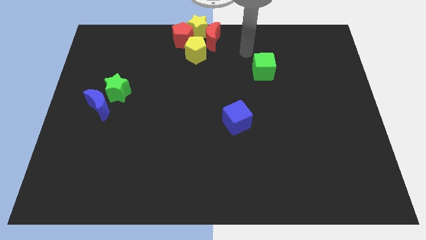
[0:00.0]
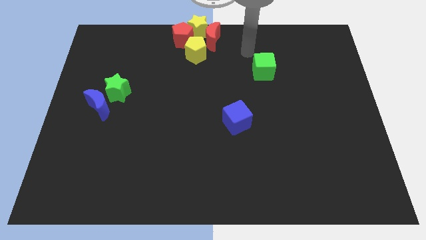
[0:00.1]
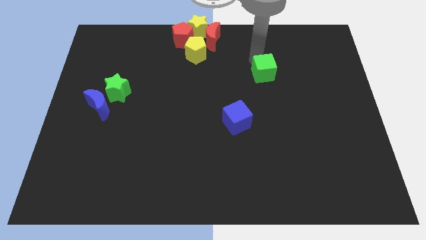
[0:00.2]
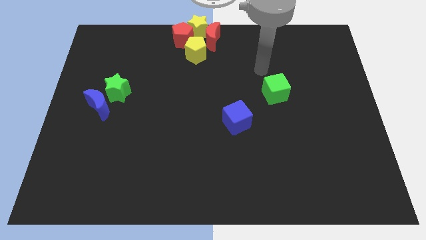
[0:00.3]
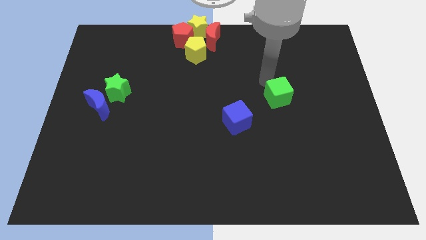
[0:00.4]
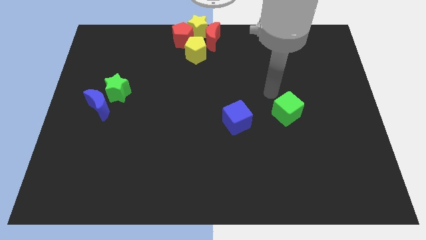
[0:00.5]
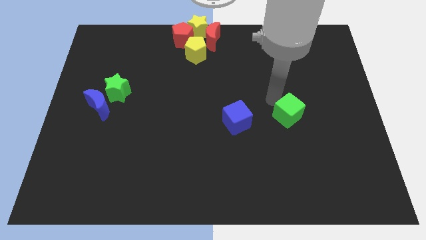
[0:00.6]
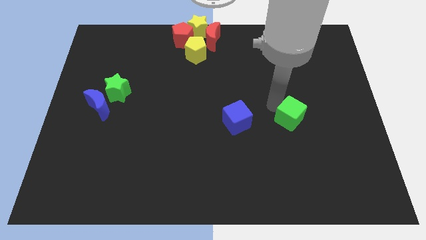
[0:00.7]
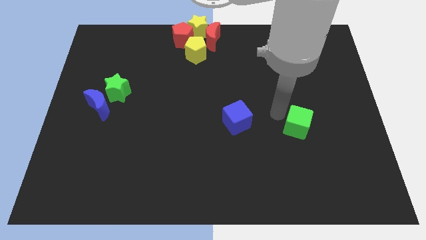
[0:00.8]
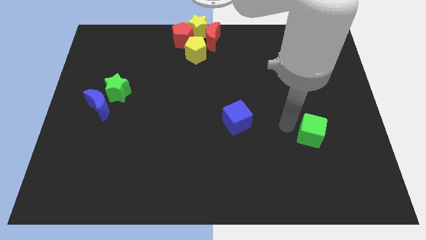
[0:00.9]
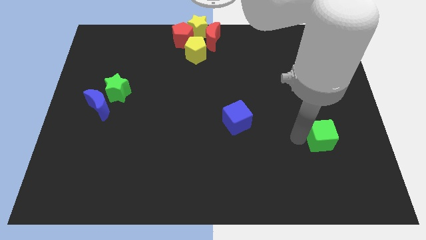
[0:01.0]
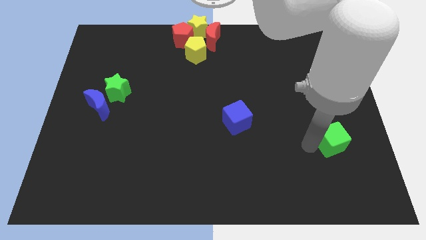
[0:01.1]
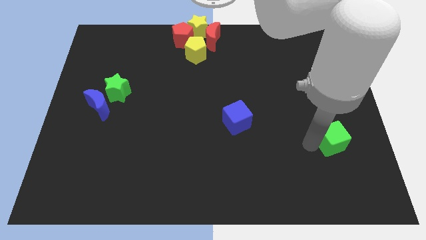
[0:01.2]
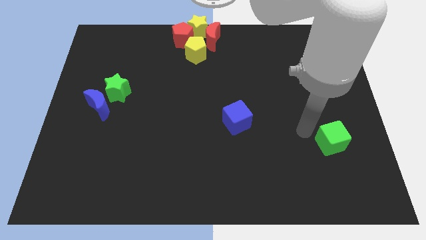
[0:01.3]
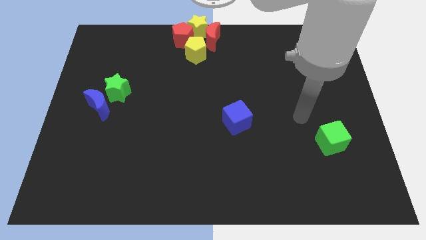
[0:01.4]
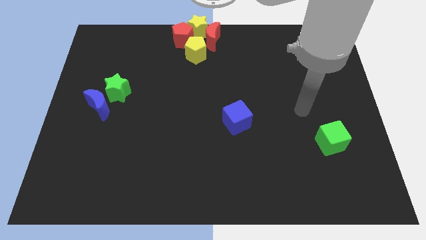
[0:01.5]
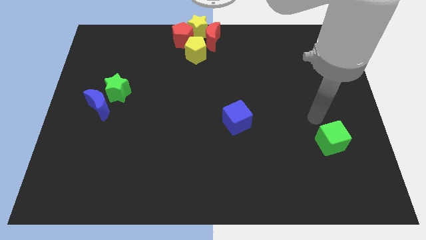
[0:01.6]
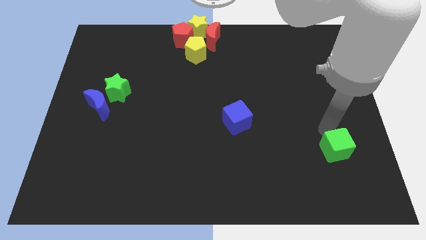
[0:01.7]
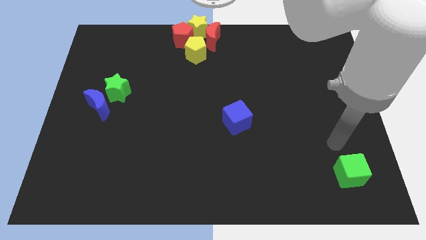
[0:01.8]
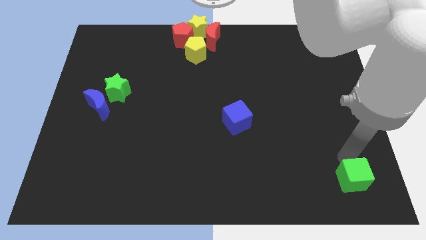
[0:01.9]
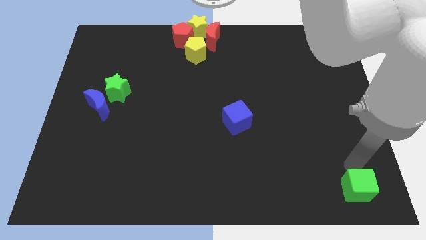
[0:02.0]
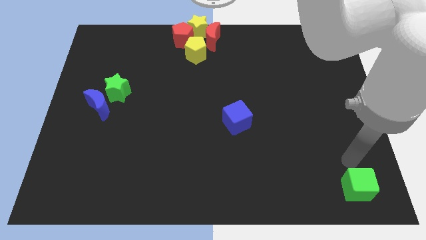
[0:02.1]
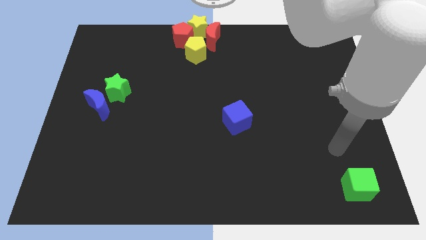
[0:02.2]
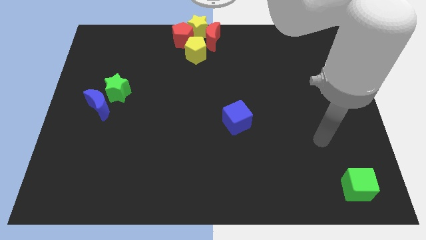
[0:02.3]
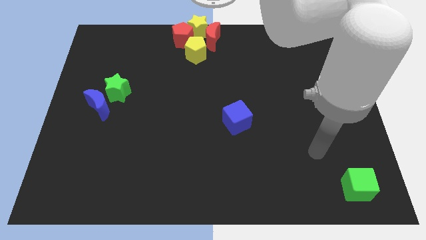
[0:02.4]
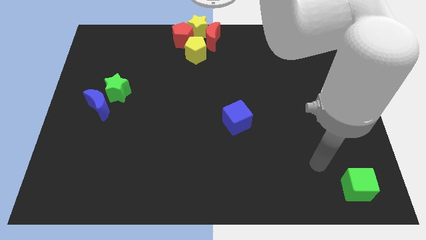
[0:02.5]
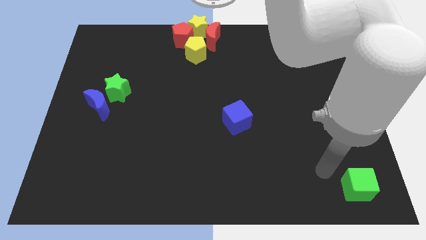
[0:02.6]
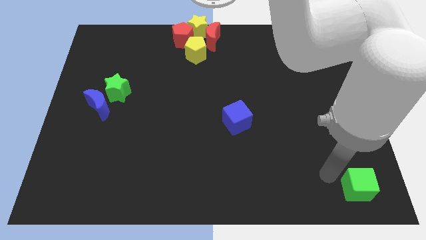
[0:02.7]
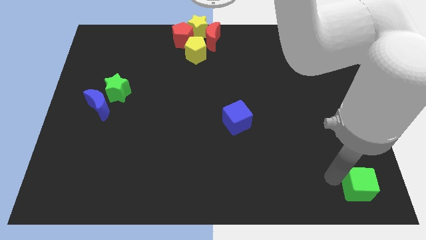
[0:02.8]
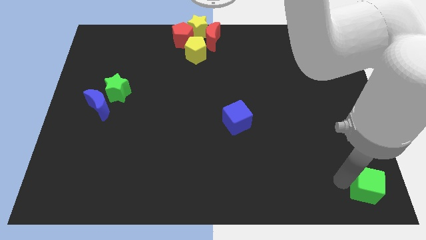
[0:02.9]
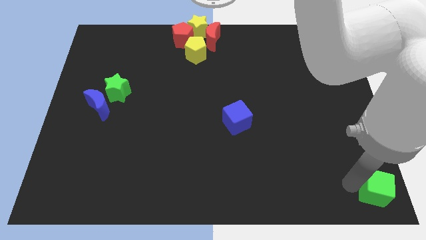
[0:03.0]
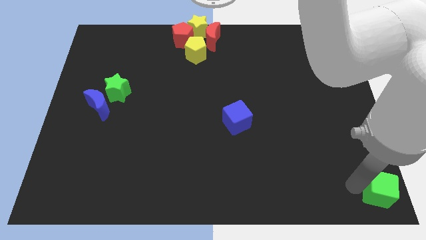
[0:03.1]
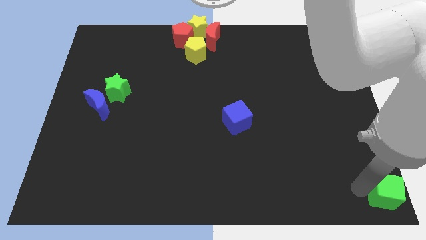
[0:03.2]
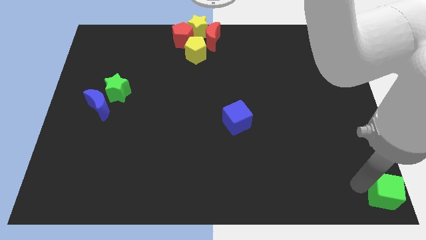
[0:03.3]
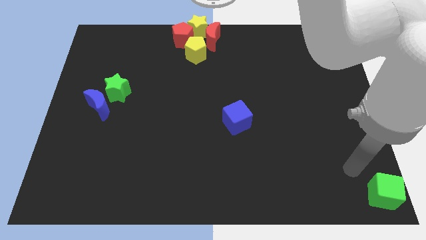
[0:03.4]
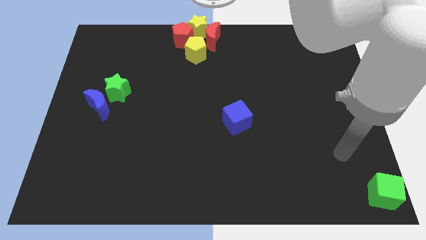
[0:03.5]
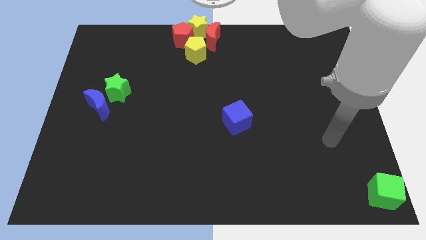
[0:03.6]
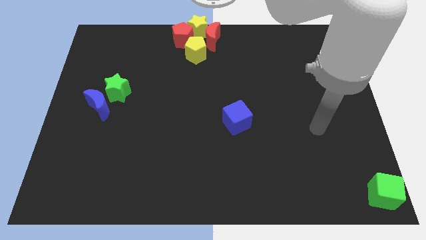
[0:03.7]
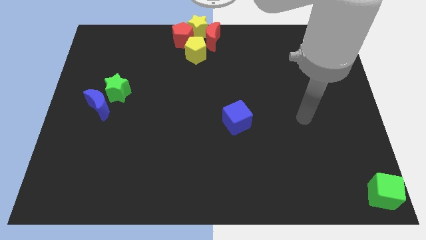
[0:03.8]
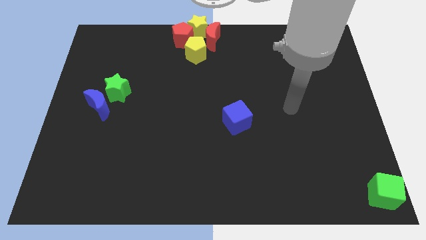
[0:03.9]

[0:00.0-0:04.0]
place the green cube in the bottom right corner

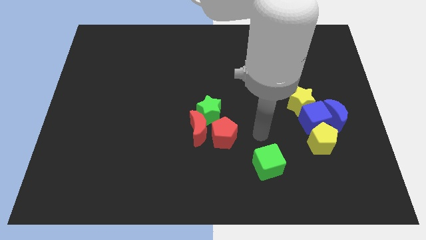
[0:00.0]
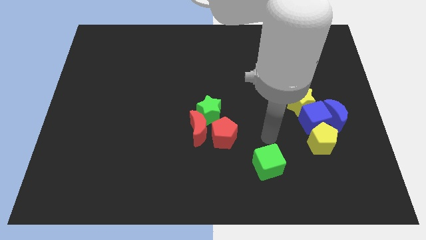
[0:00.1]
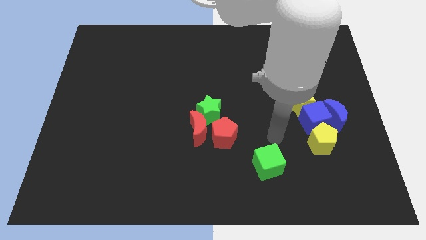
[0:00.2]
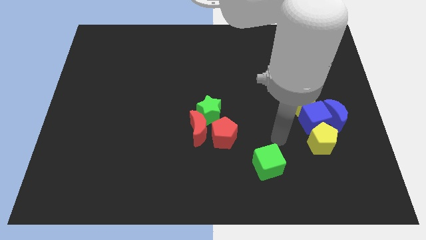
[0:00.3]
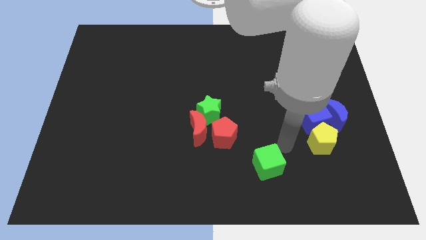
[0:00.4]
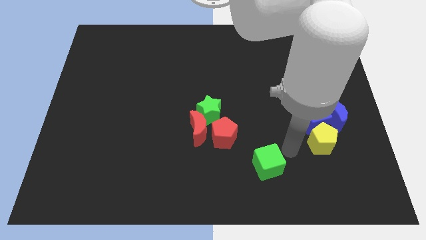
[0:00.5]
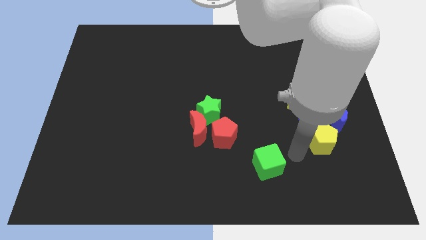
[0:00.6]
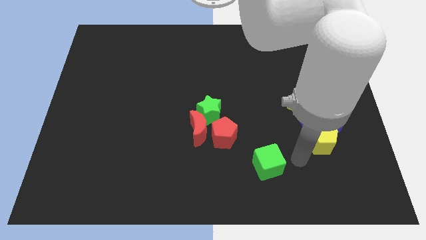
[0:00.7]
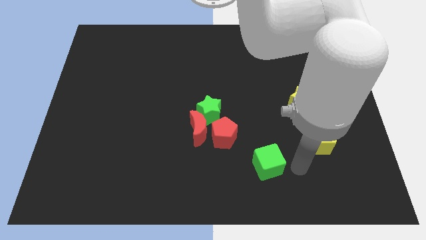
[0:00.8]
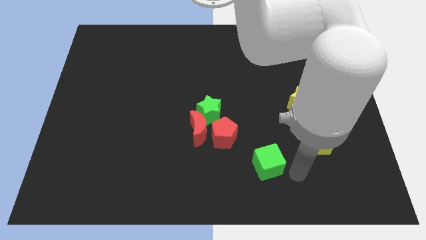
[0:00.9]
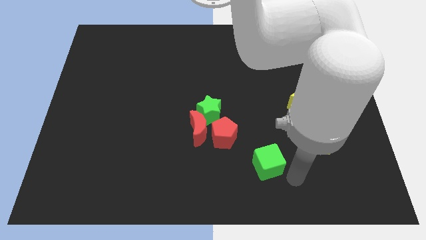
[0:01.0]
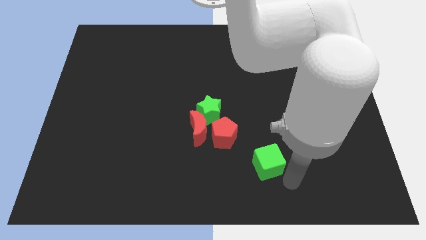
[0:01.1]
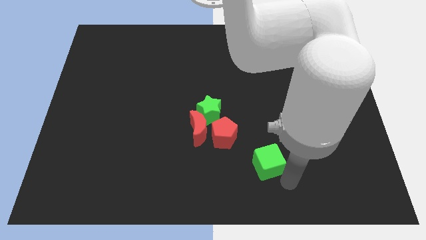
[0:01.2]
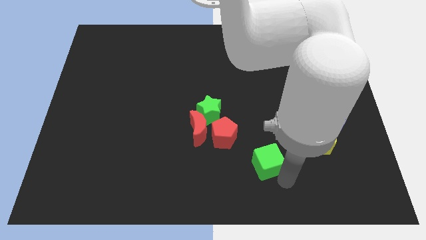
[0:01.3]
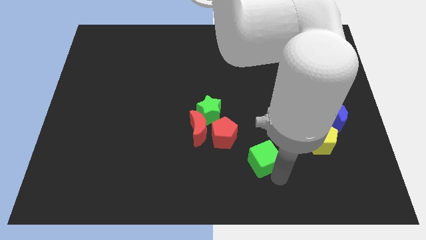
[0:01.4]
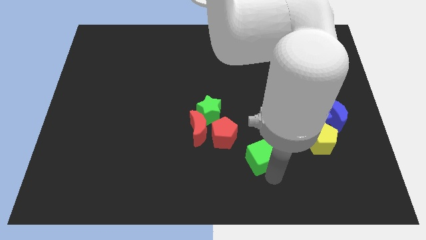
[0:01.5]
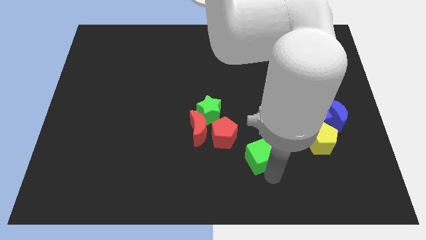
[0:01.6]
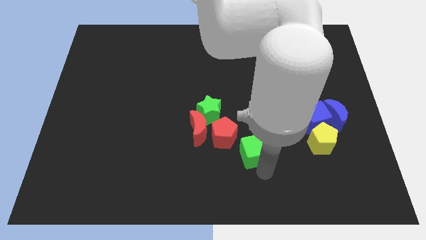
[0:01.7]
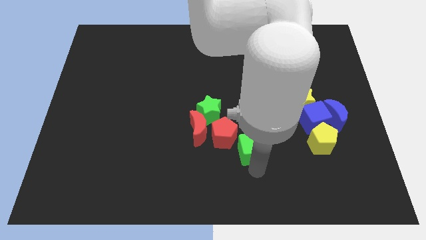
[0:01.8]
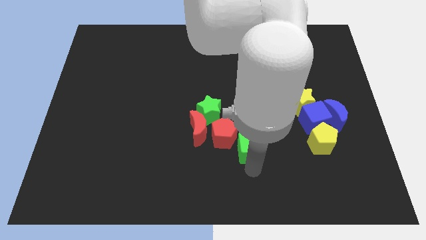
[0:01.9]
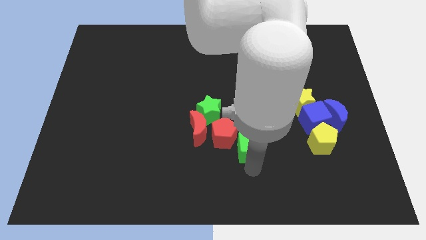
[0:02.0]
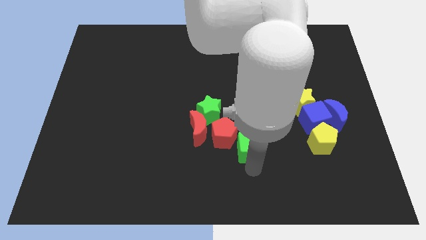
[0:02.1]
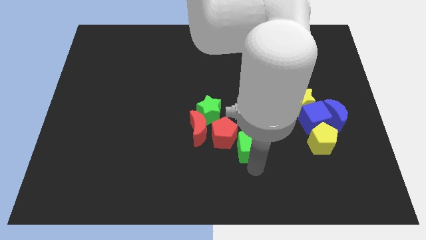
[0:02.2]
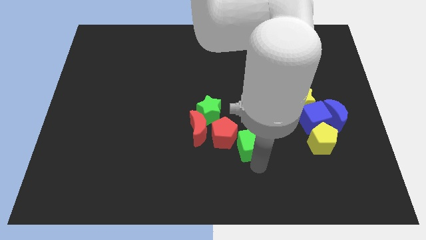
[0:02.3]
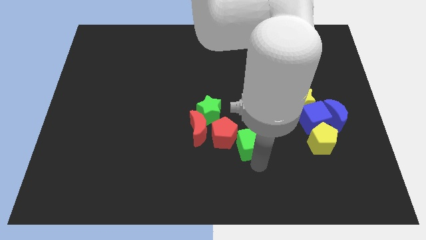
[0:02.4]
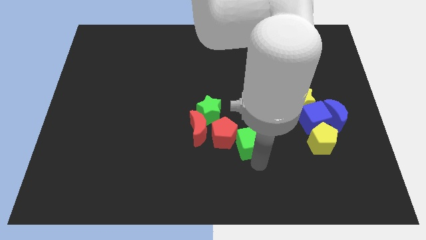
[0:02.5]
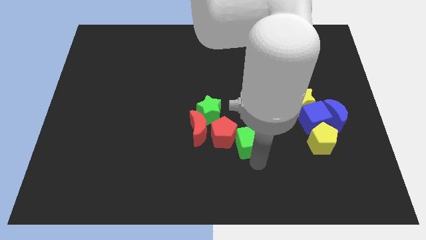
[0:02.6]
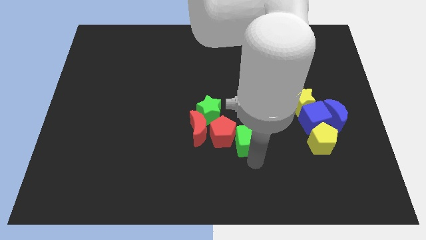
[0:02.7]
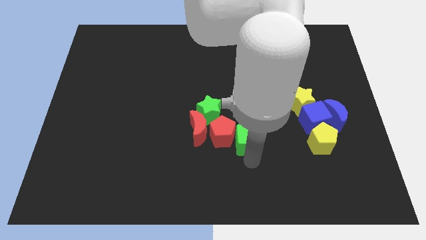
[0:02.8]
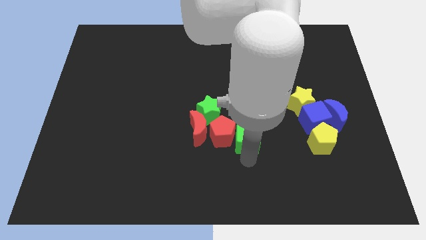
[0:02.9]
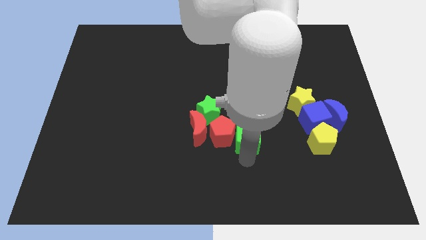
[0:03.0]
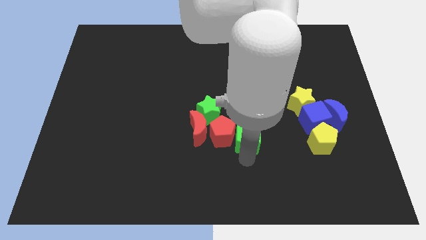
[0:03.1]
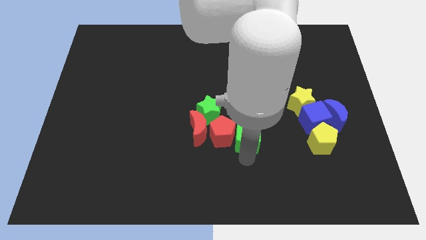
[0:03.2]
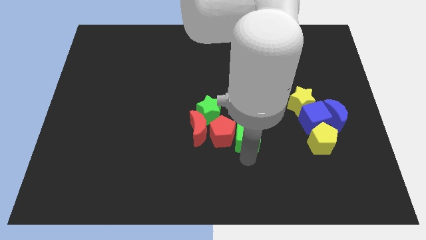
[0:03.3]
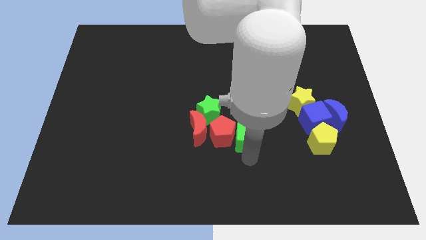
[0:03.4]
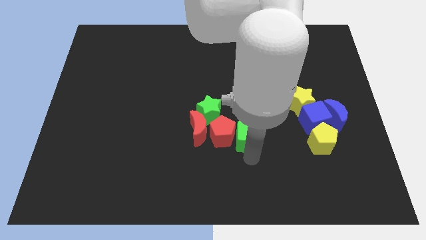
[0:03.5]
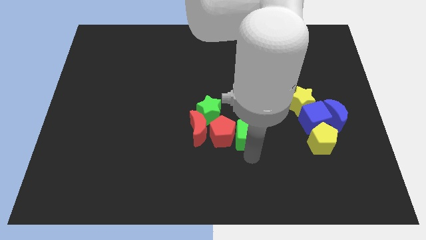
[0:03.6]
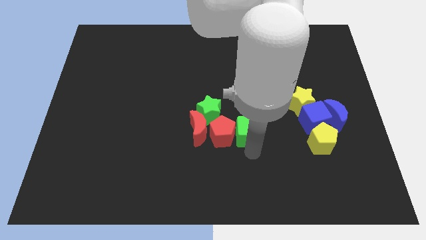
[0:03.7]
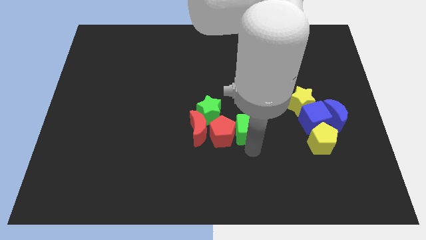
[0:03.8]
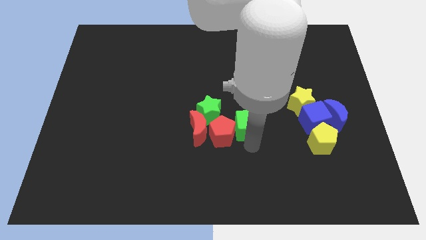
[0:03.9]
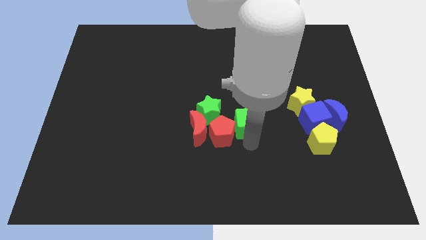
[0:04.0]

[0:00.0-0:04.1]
move the green cube parallel to the blue cube

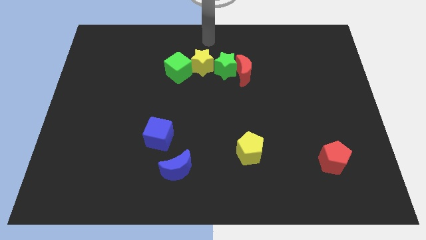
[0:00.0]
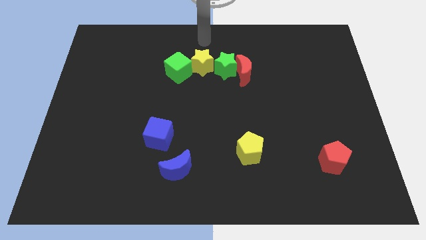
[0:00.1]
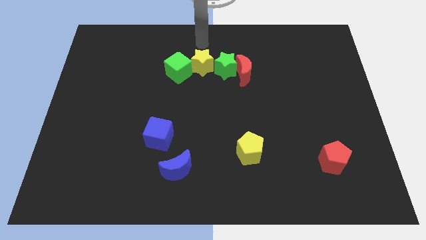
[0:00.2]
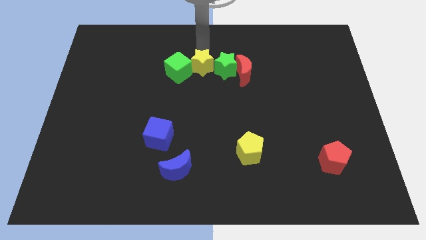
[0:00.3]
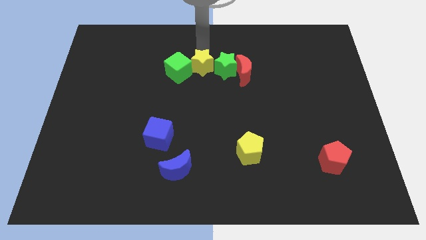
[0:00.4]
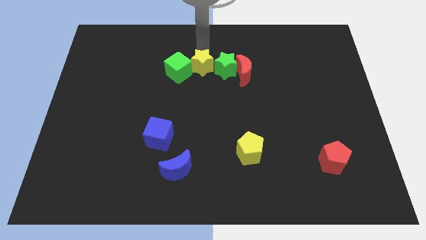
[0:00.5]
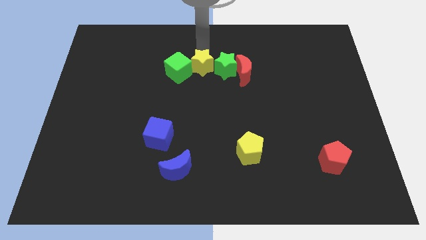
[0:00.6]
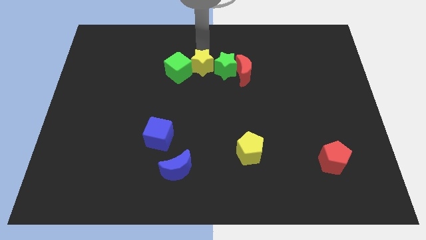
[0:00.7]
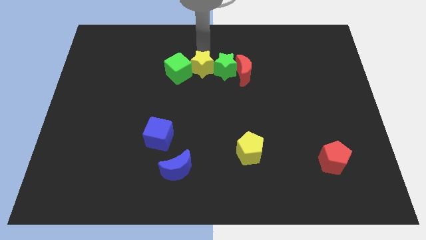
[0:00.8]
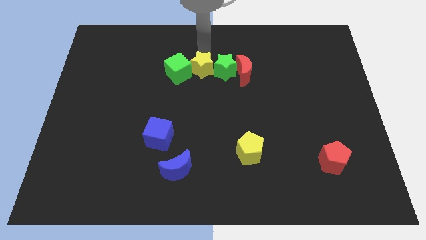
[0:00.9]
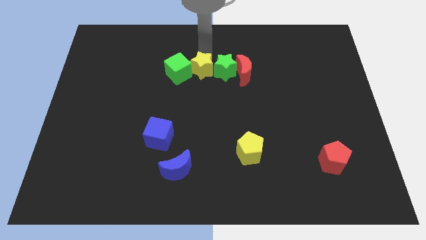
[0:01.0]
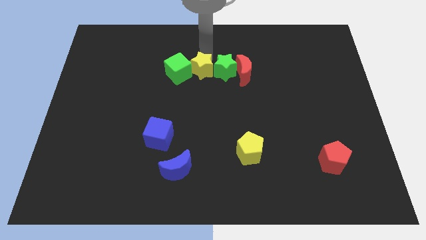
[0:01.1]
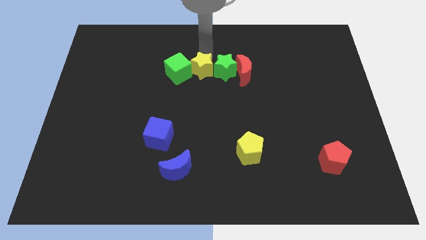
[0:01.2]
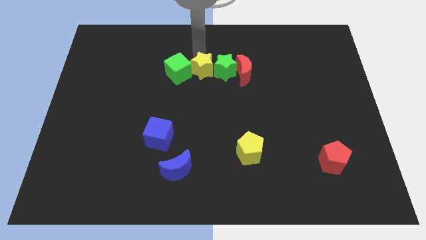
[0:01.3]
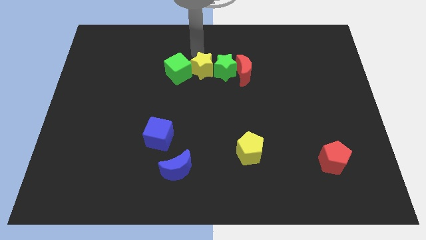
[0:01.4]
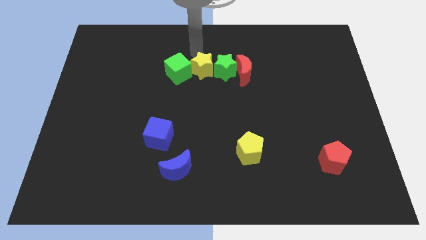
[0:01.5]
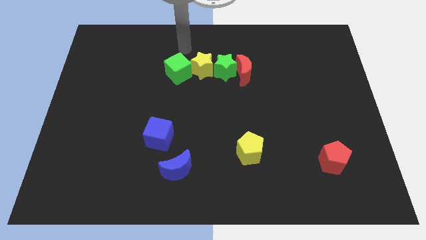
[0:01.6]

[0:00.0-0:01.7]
move the yellow star in between the green blocks
